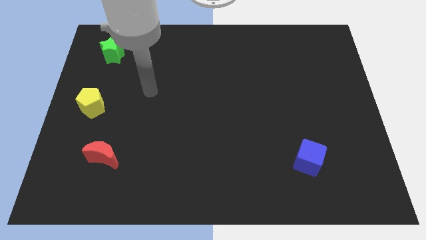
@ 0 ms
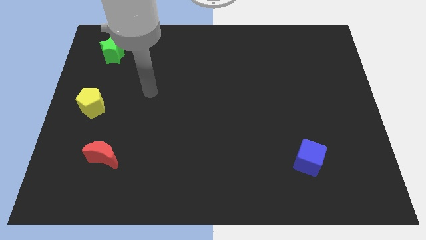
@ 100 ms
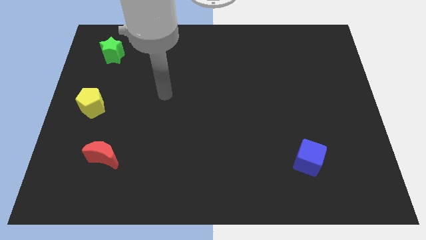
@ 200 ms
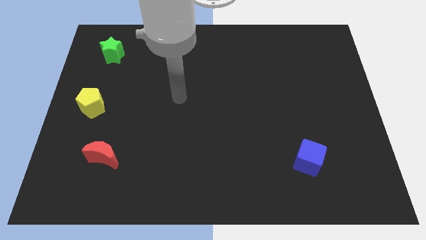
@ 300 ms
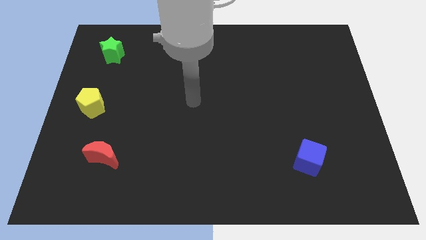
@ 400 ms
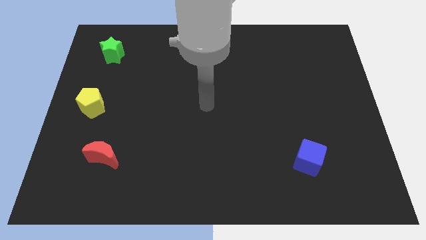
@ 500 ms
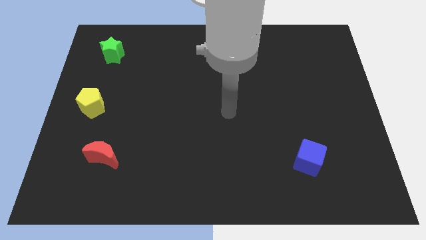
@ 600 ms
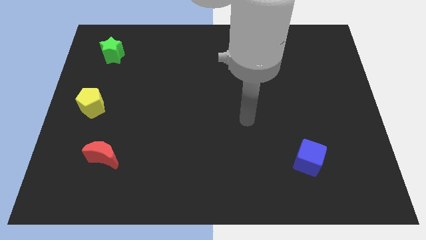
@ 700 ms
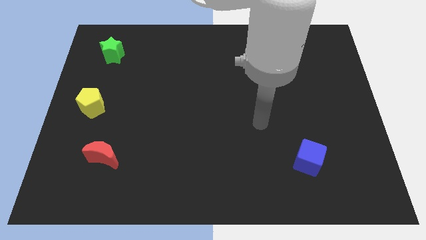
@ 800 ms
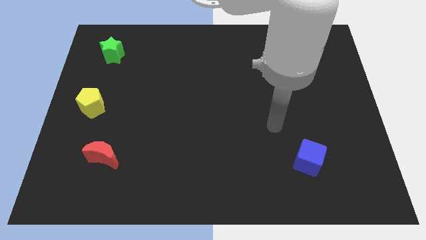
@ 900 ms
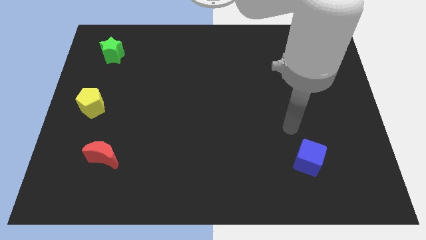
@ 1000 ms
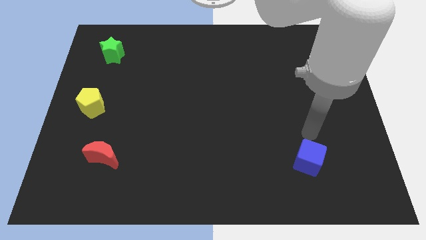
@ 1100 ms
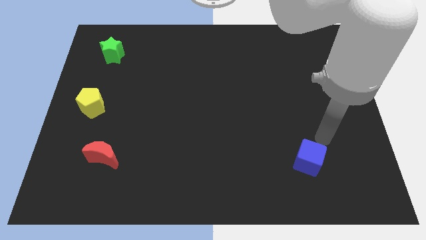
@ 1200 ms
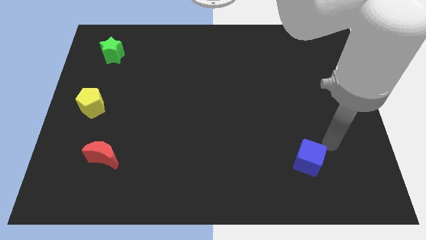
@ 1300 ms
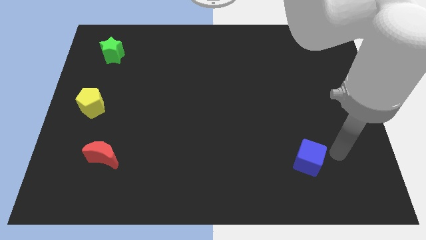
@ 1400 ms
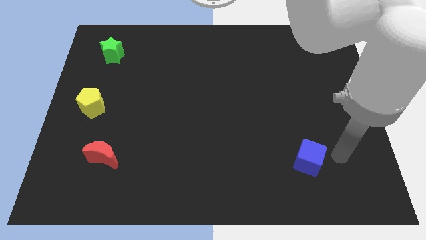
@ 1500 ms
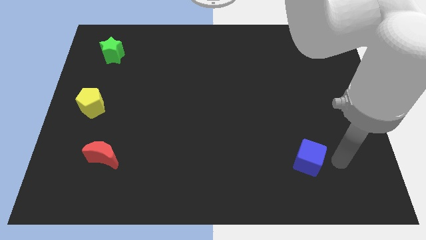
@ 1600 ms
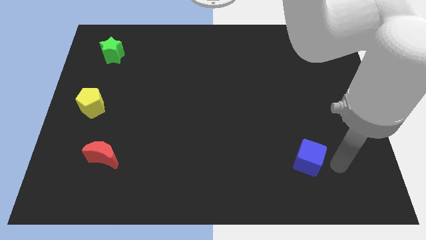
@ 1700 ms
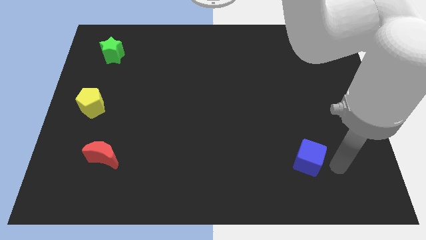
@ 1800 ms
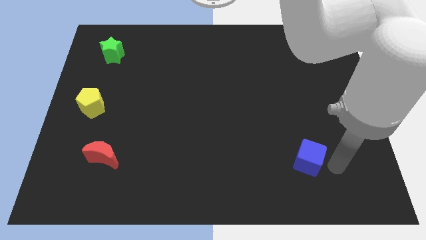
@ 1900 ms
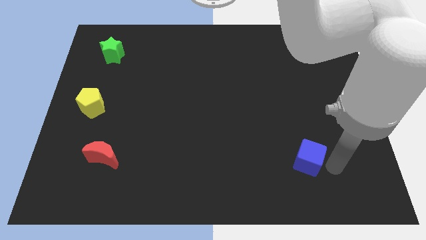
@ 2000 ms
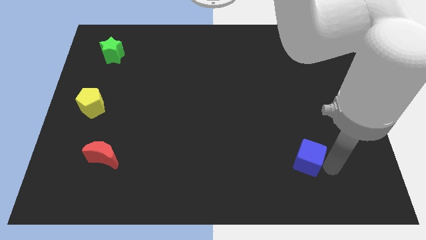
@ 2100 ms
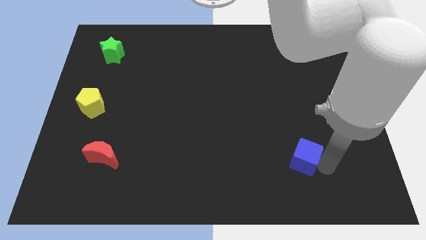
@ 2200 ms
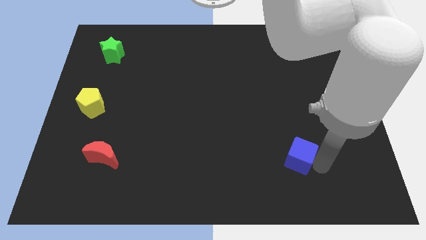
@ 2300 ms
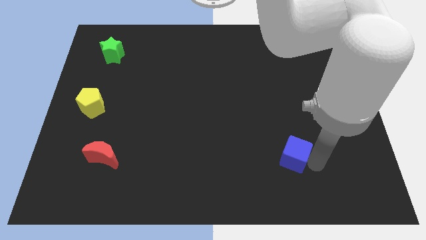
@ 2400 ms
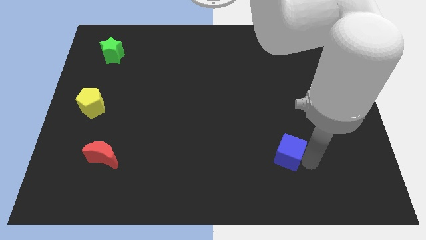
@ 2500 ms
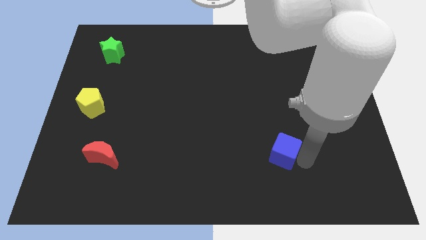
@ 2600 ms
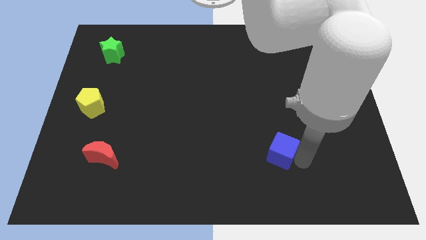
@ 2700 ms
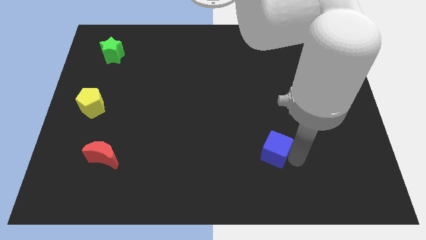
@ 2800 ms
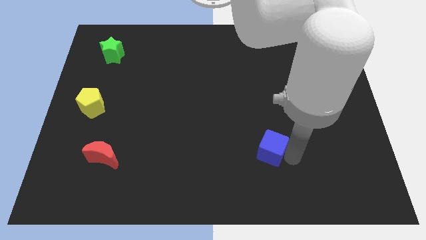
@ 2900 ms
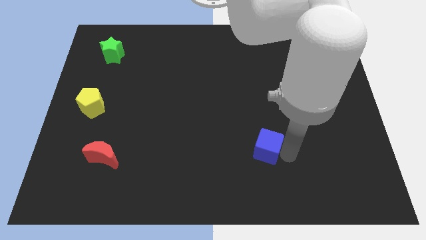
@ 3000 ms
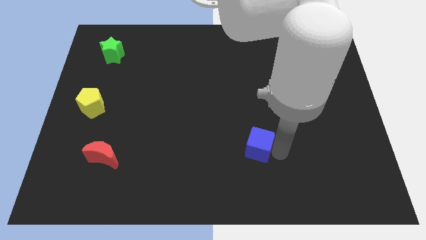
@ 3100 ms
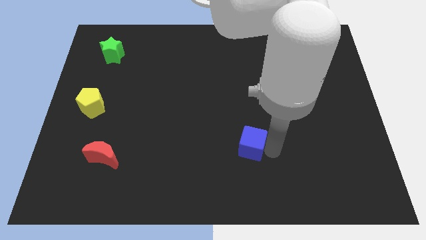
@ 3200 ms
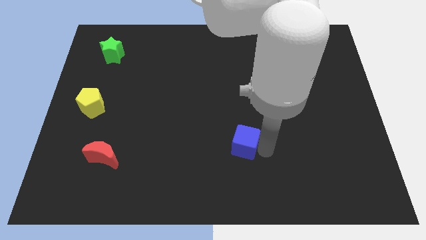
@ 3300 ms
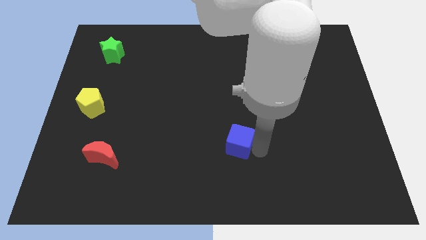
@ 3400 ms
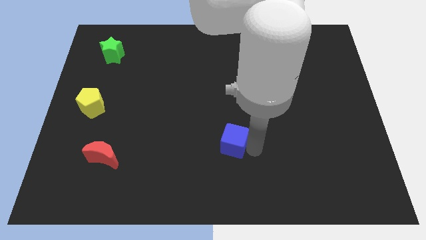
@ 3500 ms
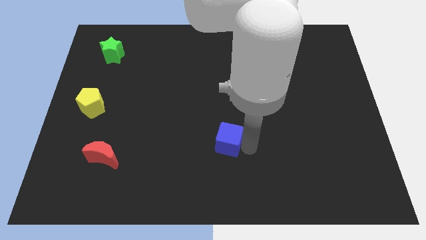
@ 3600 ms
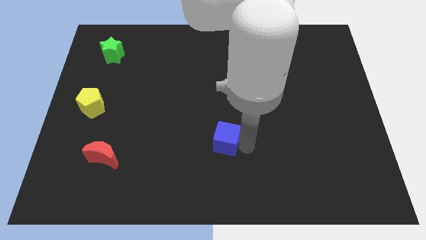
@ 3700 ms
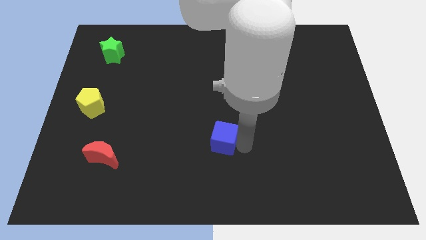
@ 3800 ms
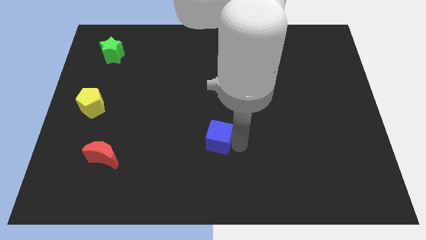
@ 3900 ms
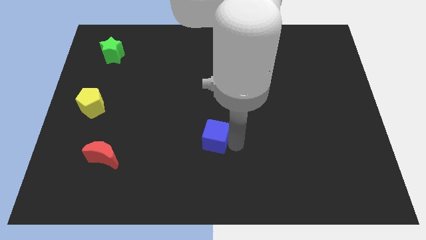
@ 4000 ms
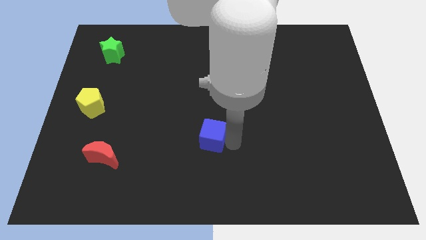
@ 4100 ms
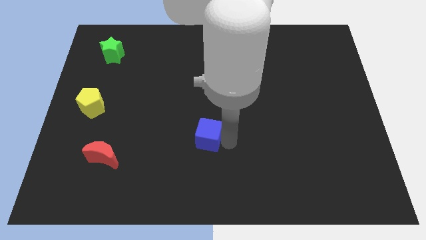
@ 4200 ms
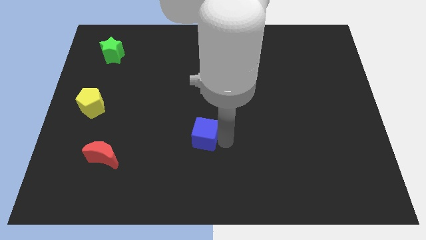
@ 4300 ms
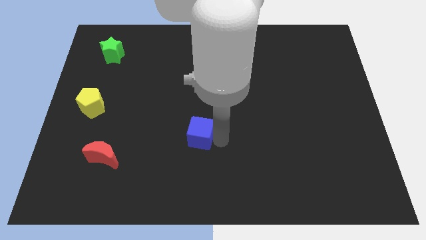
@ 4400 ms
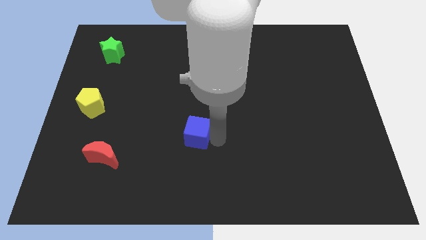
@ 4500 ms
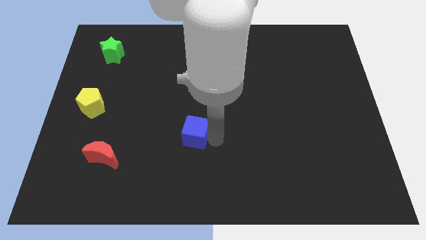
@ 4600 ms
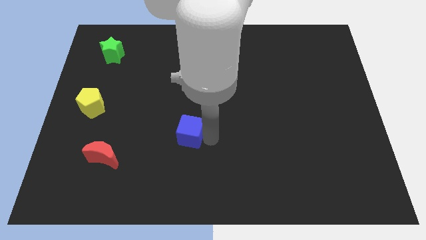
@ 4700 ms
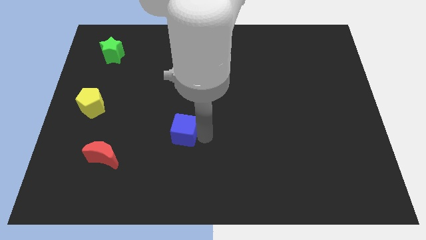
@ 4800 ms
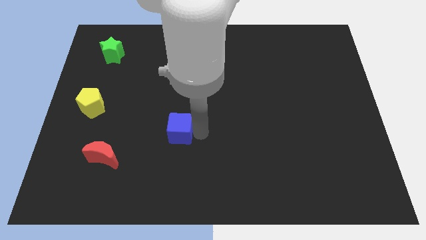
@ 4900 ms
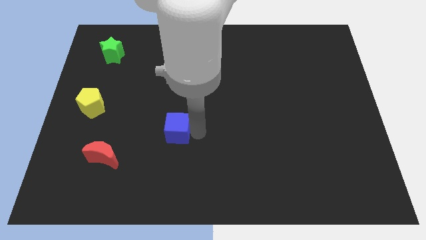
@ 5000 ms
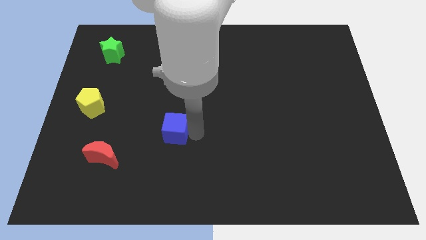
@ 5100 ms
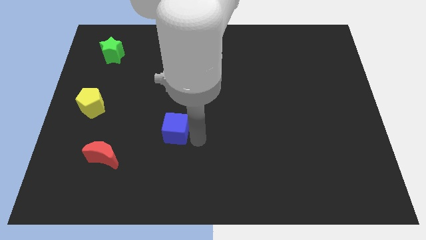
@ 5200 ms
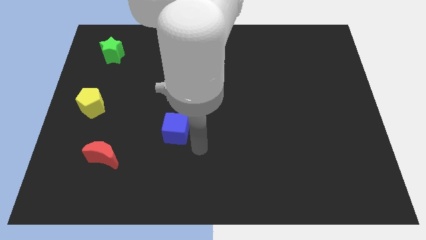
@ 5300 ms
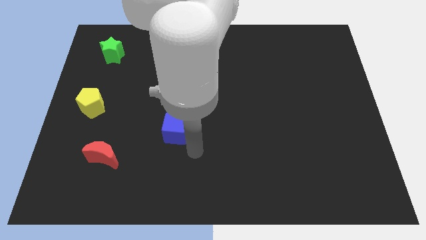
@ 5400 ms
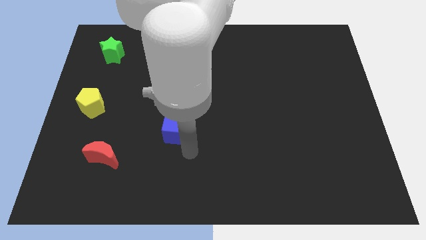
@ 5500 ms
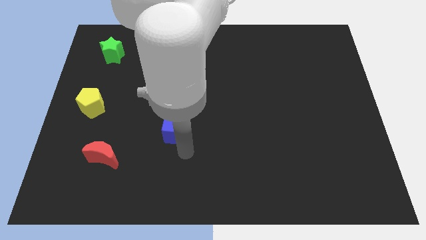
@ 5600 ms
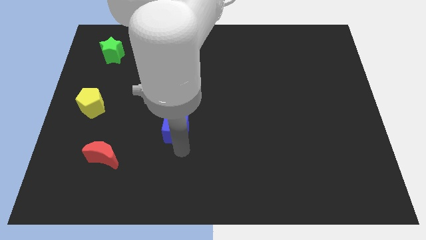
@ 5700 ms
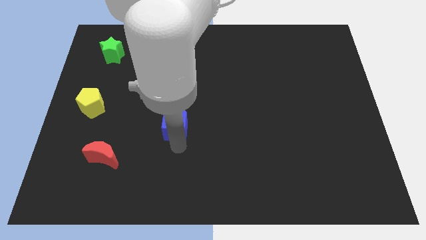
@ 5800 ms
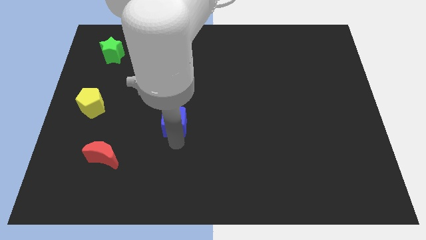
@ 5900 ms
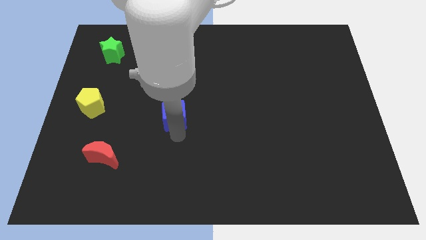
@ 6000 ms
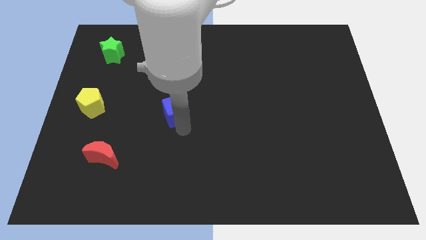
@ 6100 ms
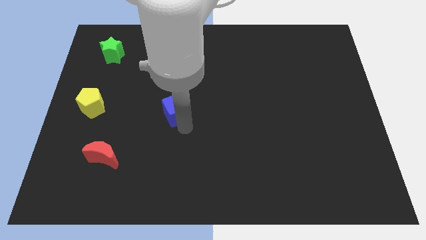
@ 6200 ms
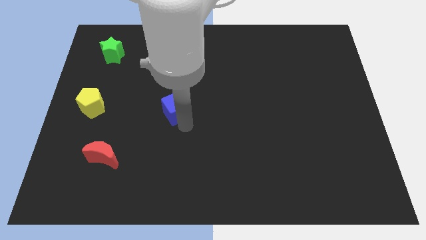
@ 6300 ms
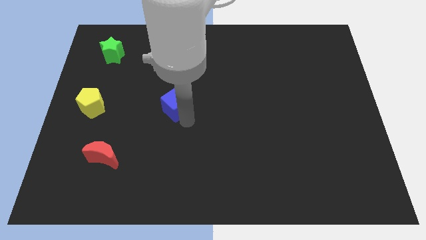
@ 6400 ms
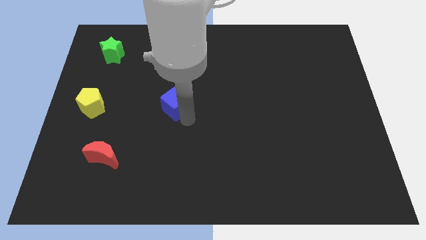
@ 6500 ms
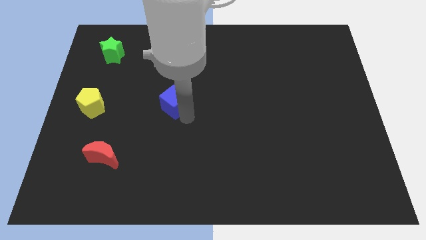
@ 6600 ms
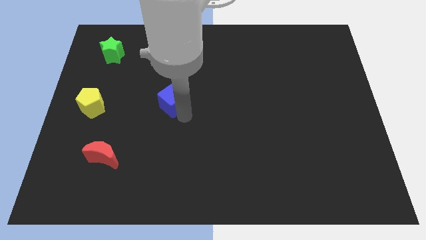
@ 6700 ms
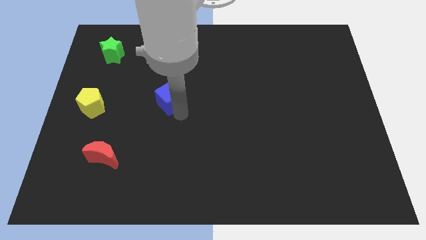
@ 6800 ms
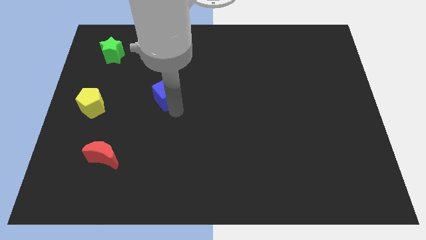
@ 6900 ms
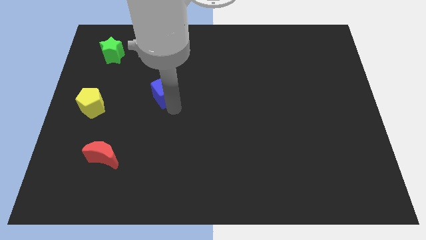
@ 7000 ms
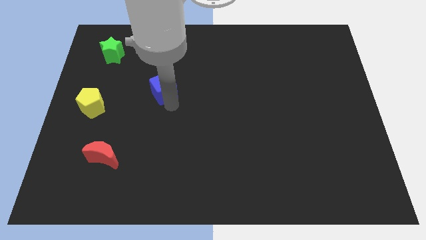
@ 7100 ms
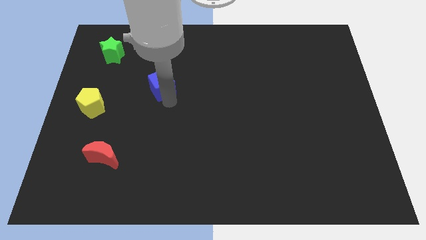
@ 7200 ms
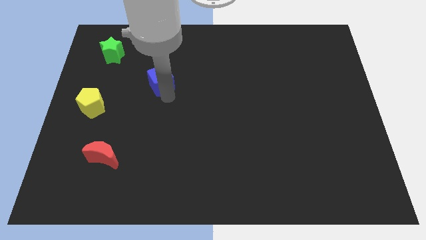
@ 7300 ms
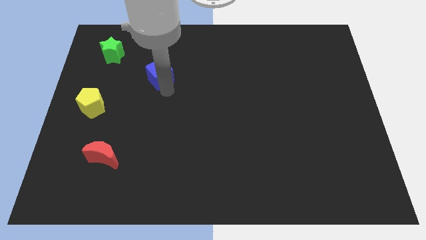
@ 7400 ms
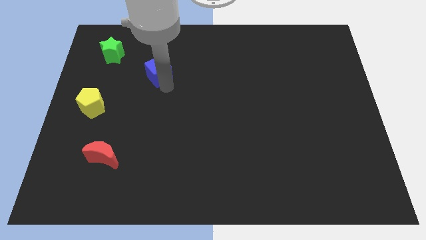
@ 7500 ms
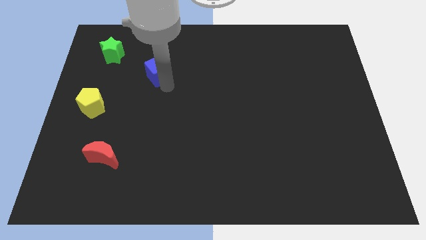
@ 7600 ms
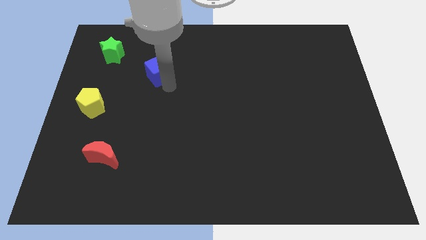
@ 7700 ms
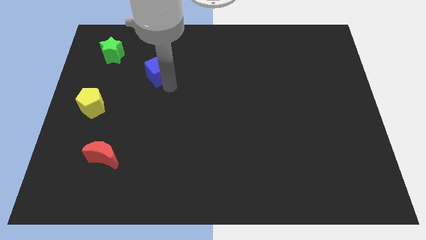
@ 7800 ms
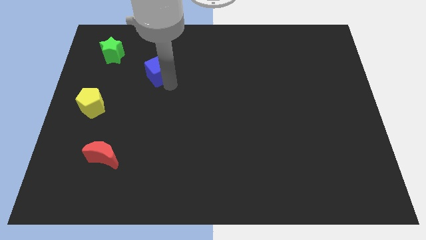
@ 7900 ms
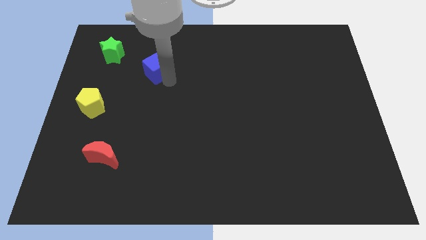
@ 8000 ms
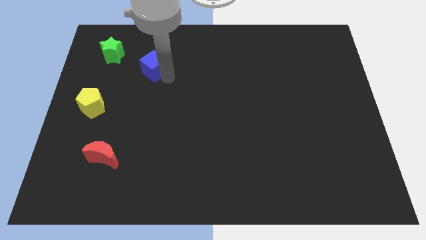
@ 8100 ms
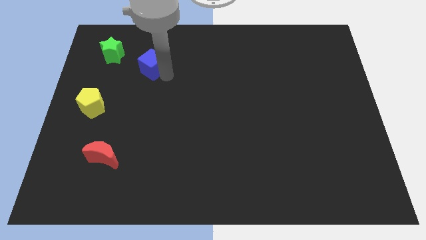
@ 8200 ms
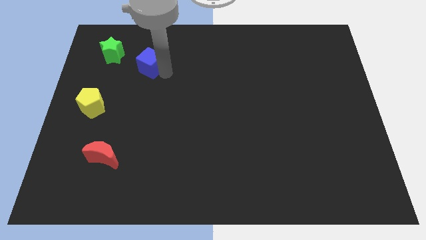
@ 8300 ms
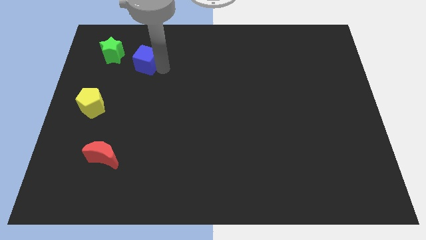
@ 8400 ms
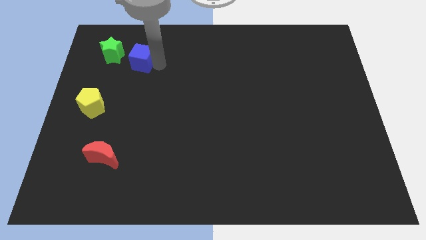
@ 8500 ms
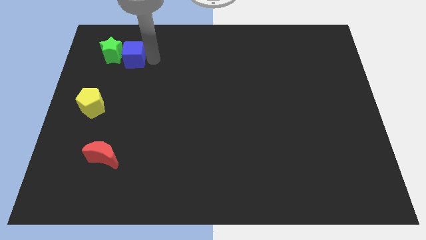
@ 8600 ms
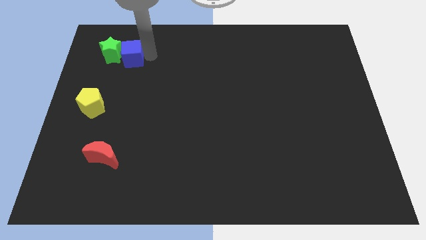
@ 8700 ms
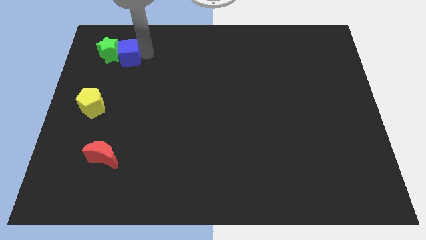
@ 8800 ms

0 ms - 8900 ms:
push the cube to the star
